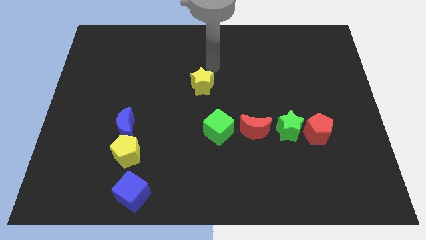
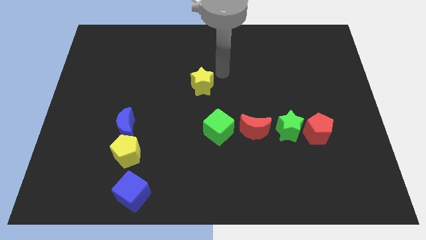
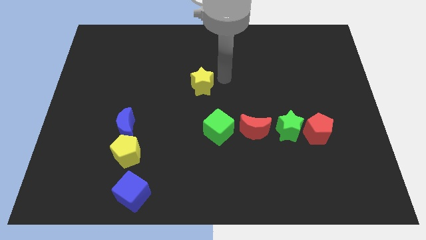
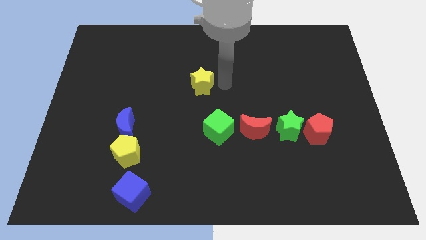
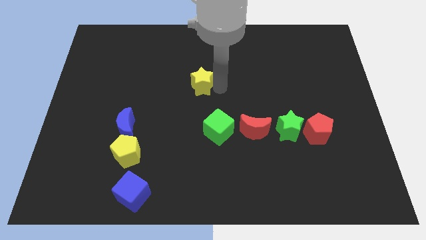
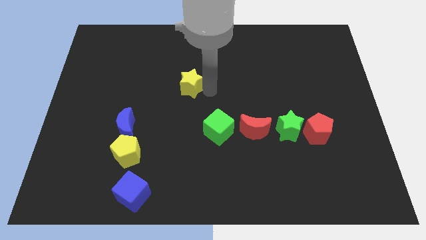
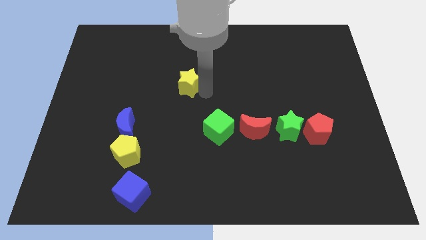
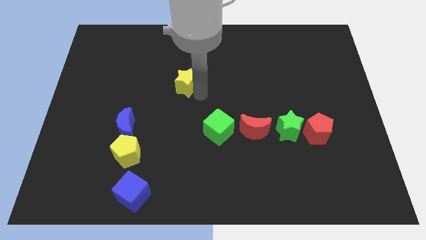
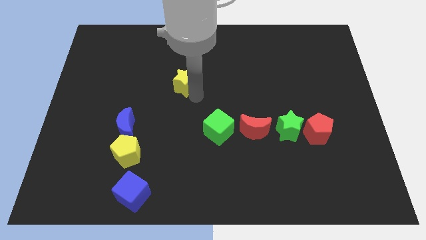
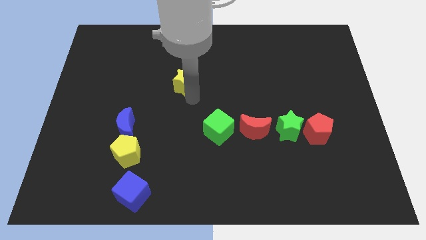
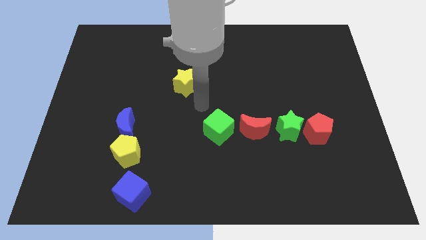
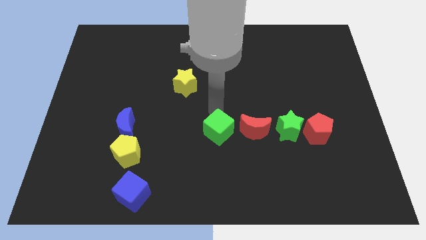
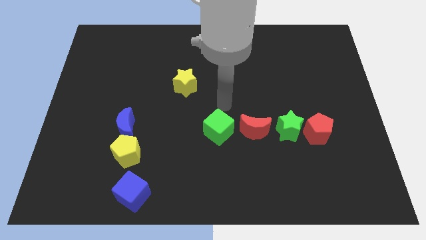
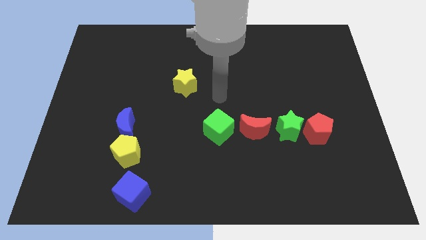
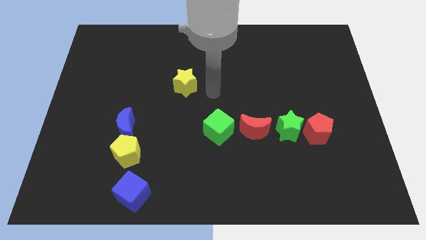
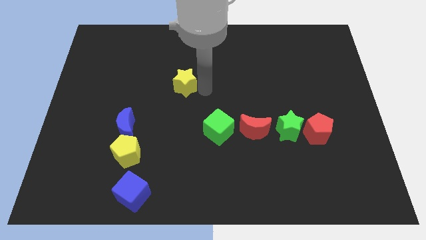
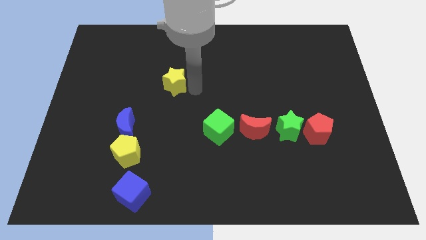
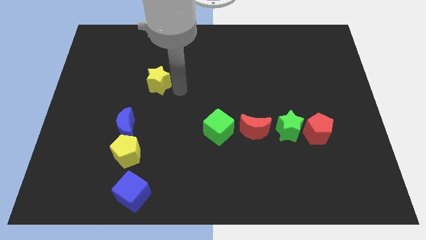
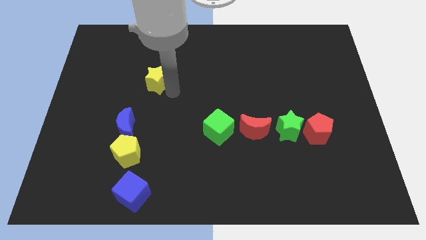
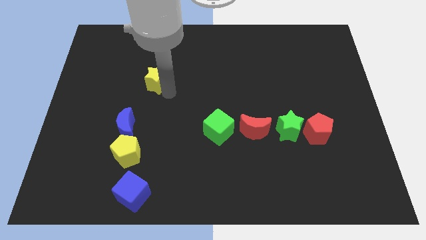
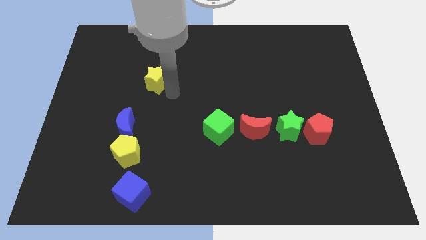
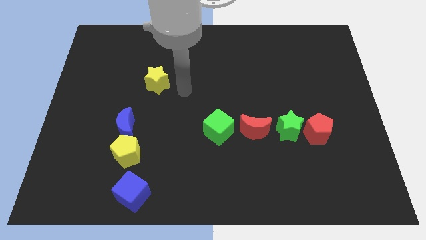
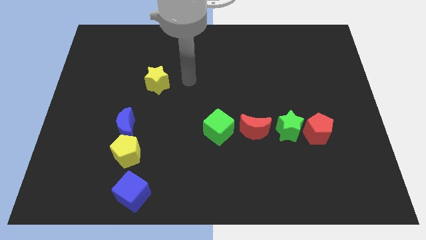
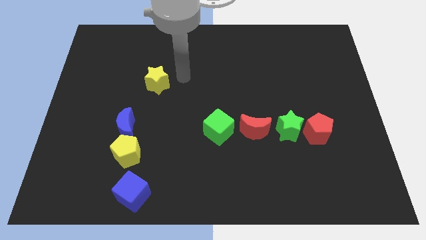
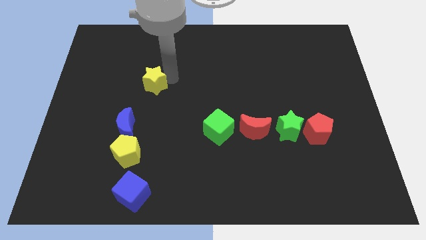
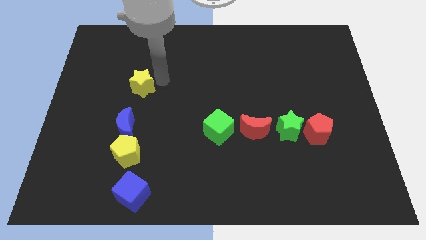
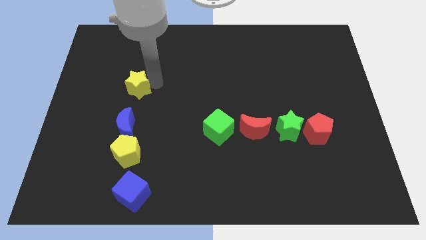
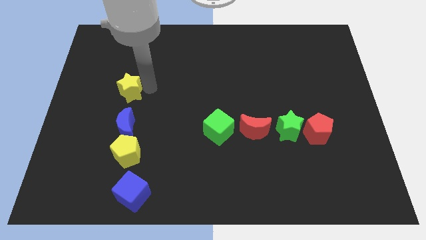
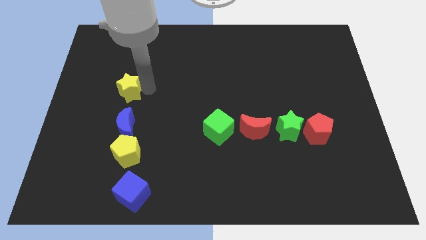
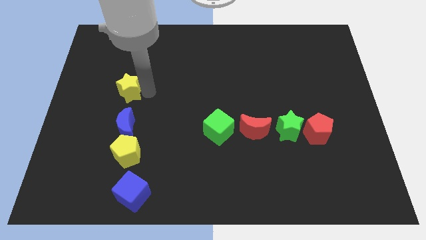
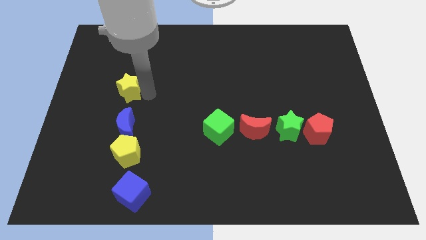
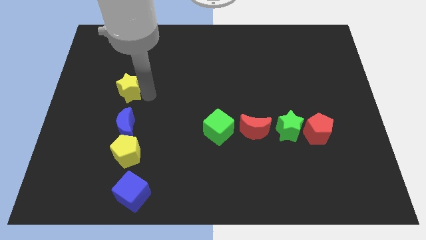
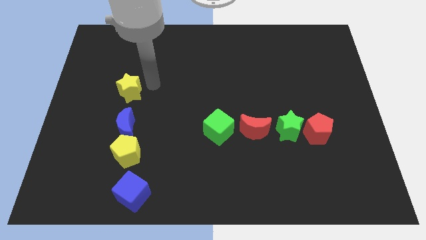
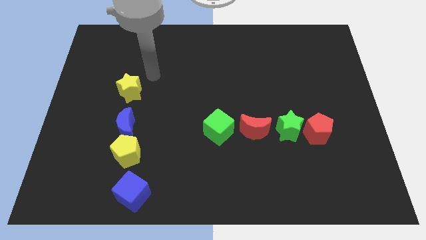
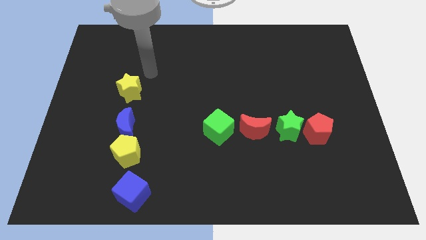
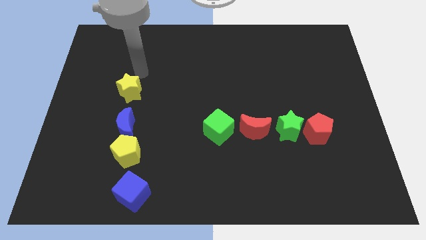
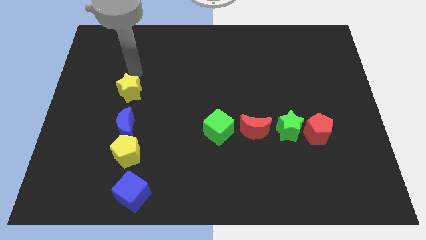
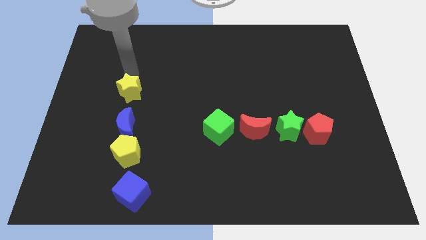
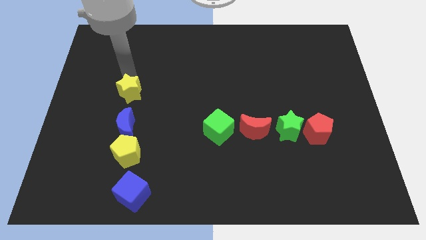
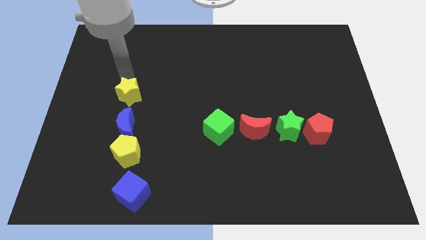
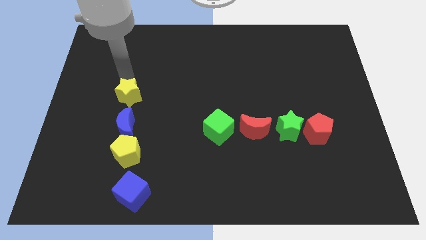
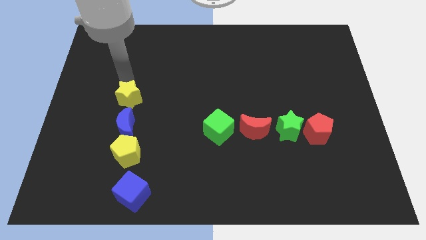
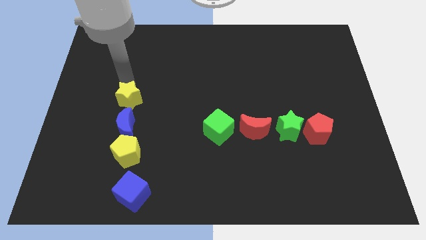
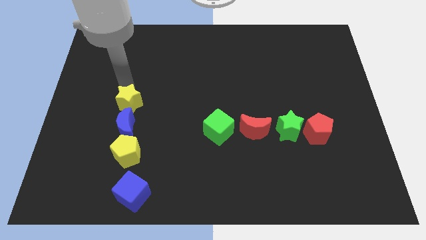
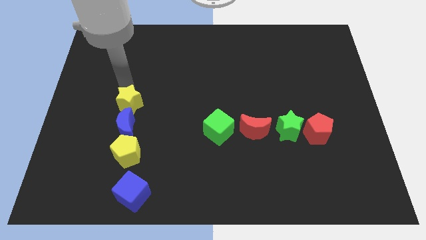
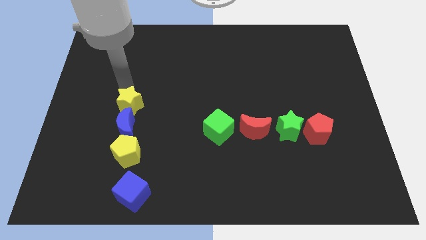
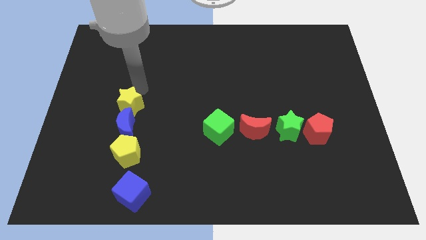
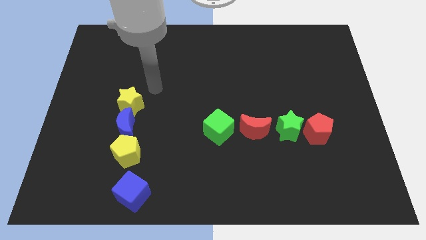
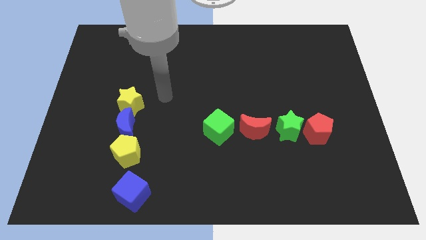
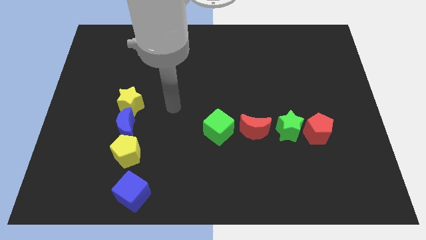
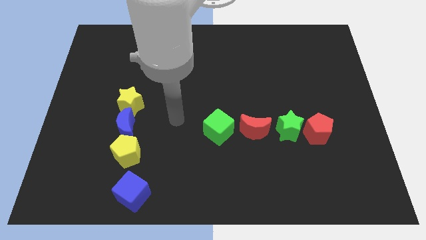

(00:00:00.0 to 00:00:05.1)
push yellow star into blue moon in a vertically

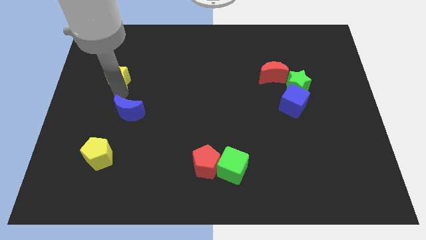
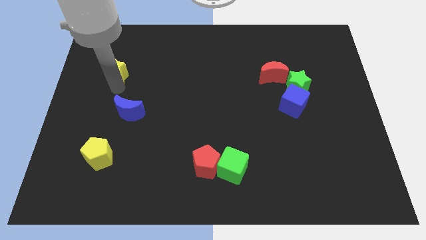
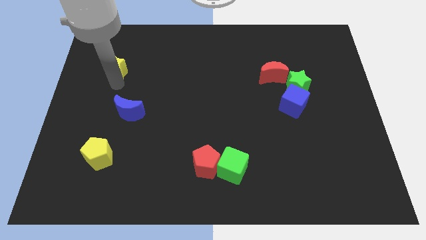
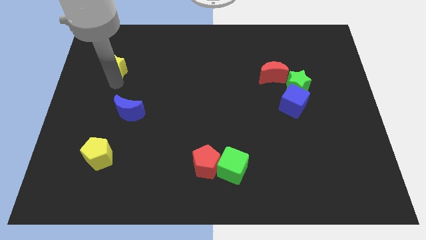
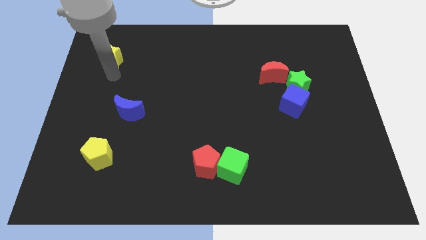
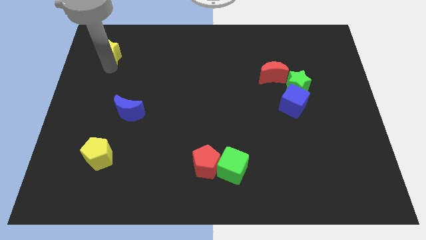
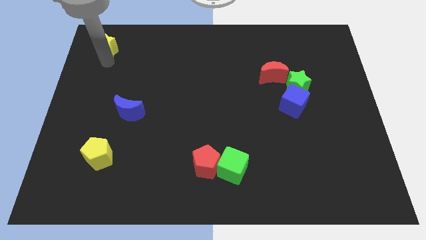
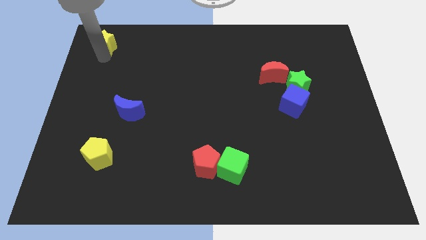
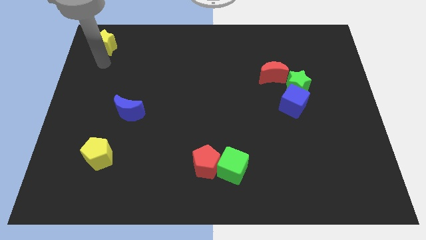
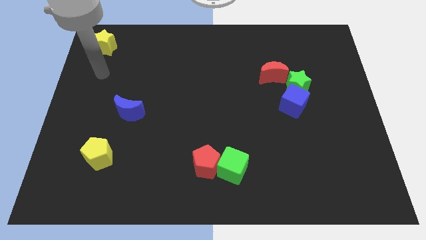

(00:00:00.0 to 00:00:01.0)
move the yellow star to the top left corner

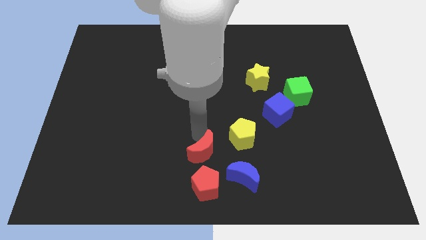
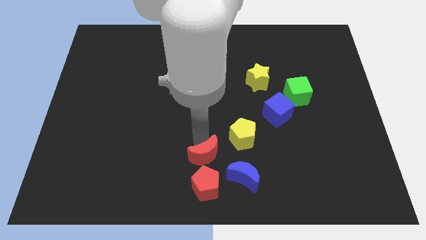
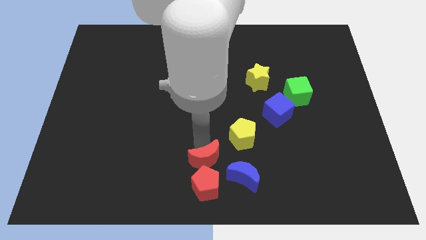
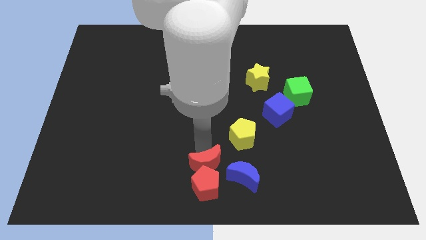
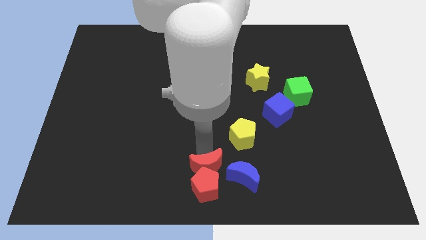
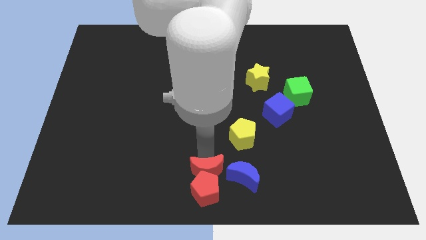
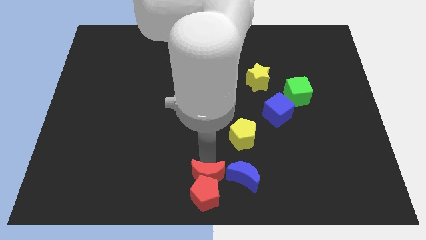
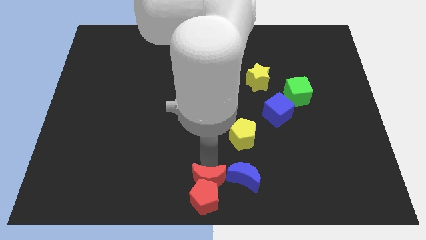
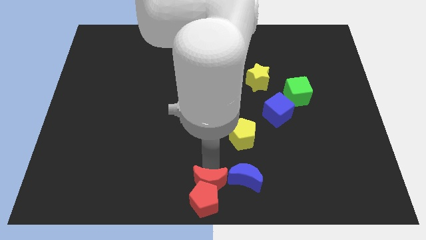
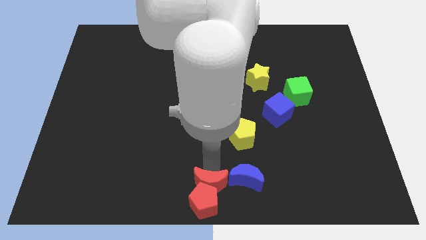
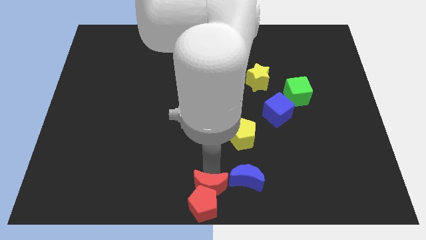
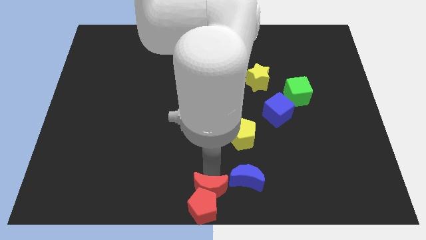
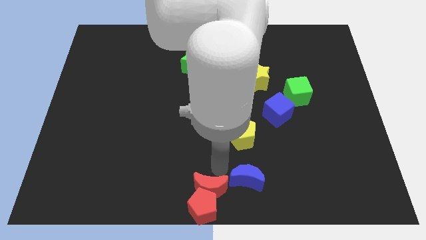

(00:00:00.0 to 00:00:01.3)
place red crescent above red pentagon

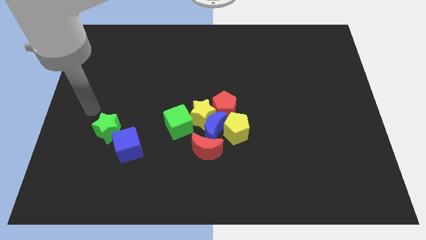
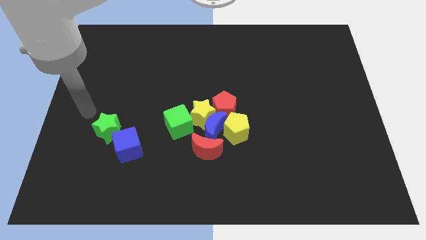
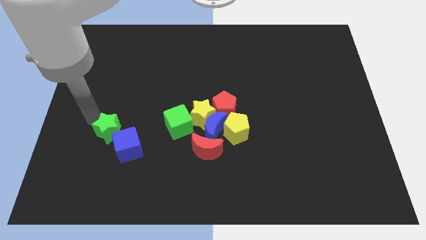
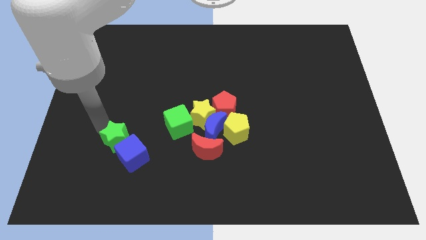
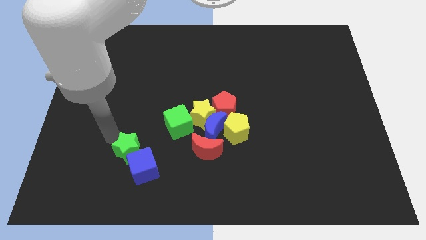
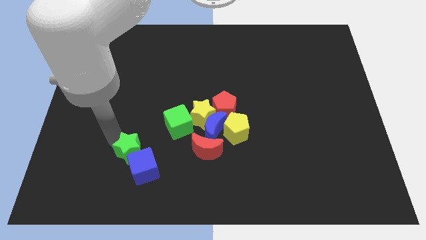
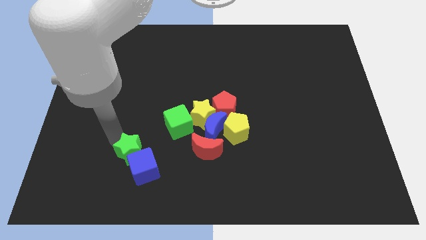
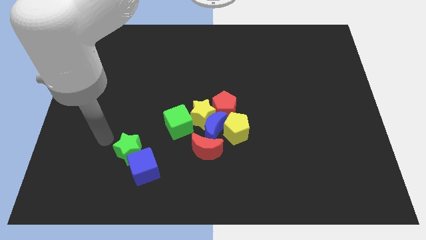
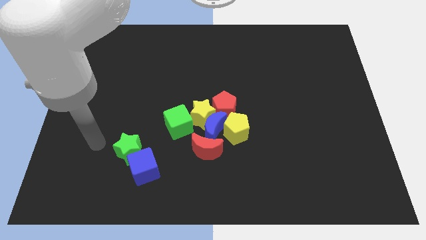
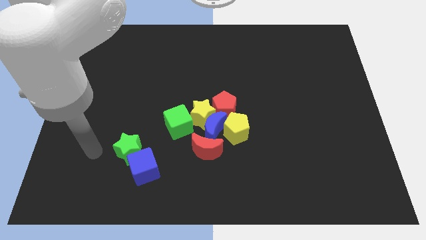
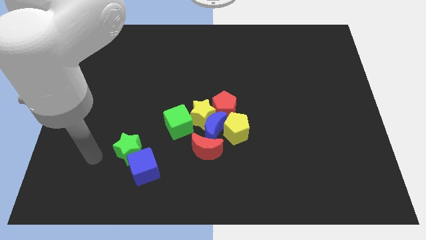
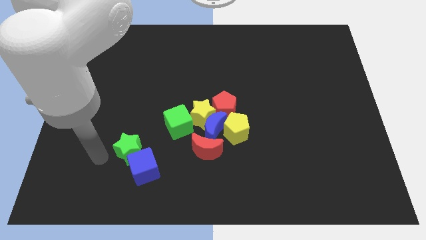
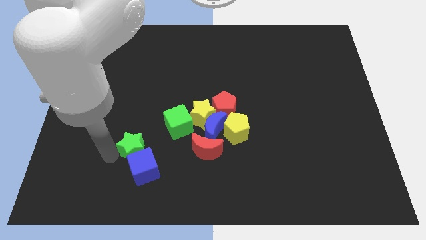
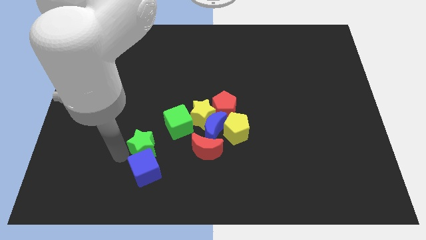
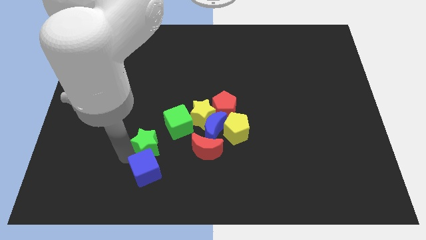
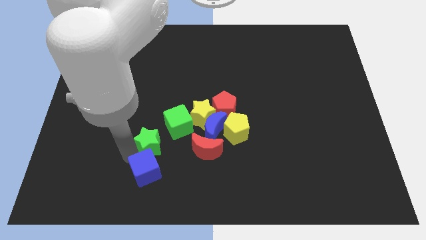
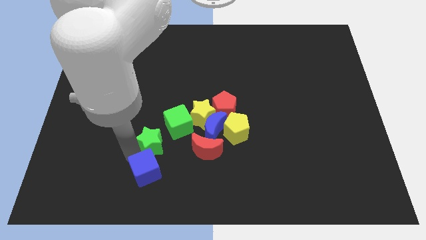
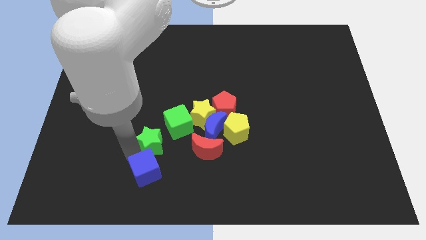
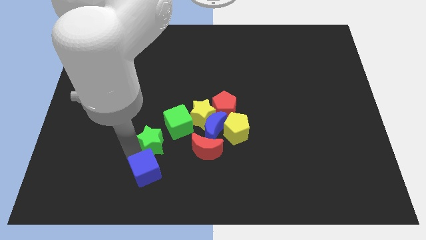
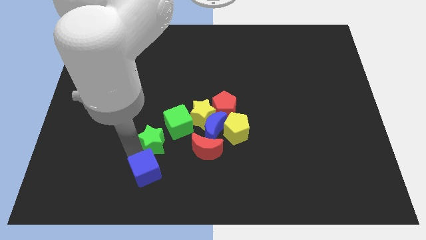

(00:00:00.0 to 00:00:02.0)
move green star towards the green cube
